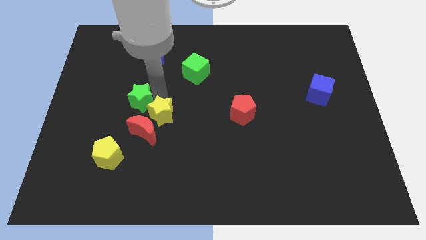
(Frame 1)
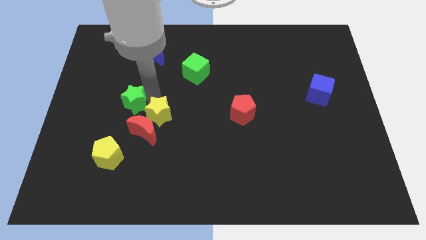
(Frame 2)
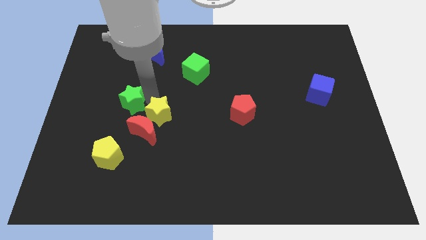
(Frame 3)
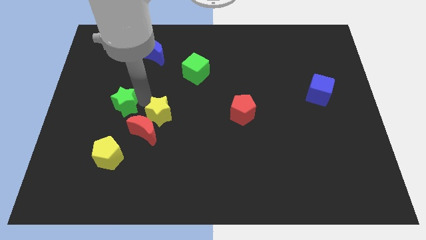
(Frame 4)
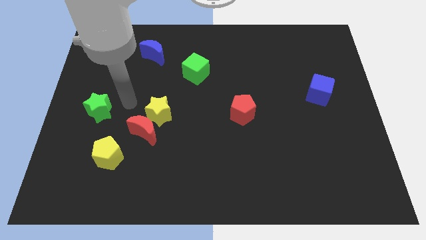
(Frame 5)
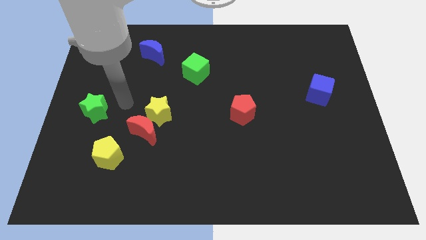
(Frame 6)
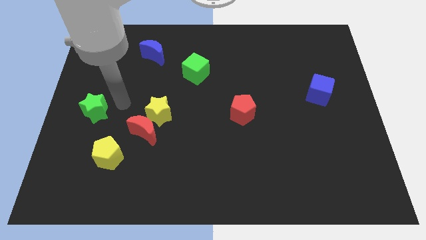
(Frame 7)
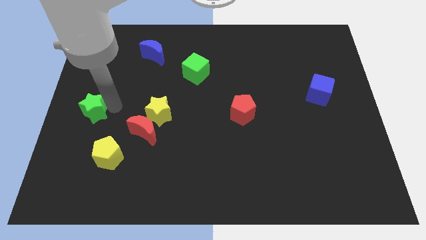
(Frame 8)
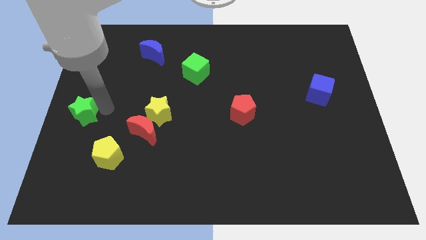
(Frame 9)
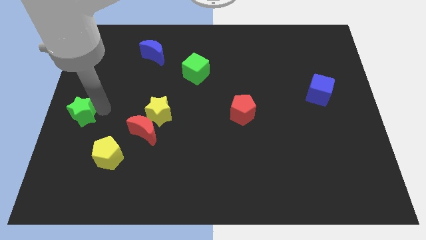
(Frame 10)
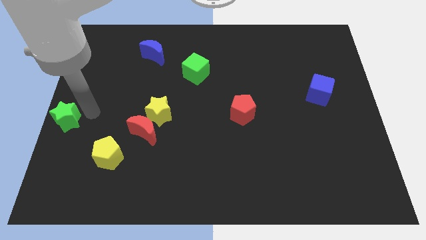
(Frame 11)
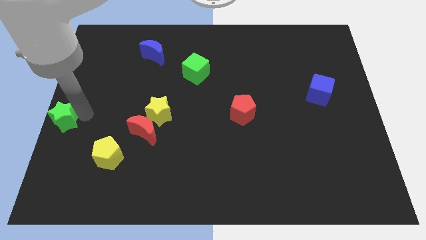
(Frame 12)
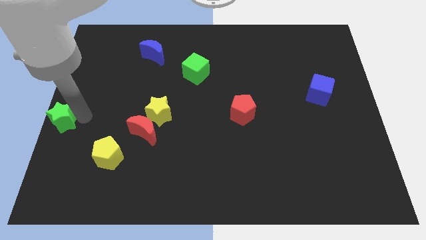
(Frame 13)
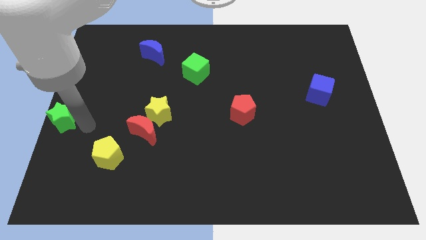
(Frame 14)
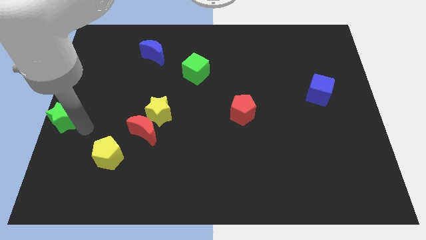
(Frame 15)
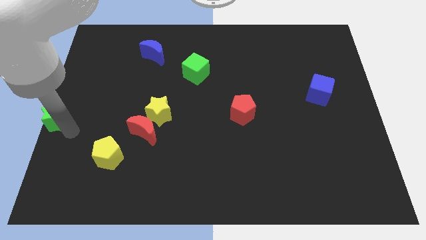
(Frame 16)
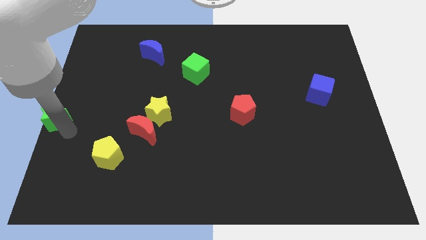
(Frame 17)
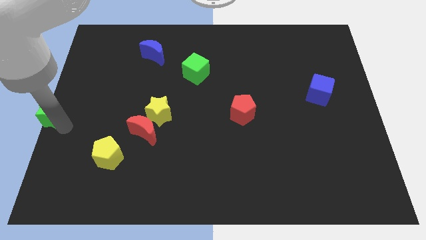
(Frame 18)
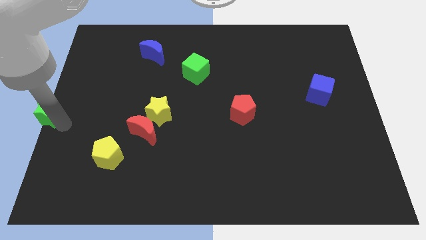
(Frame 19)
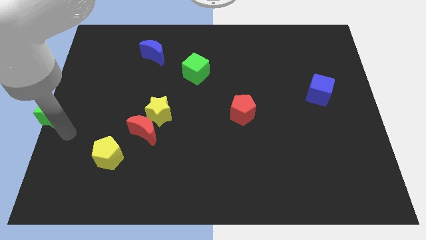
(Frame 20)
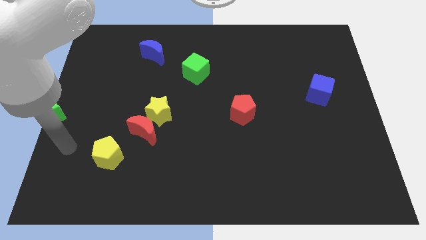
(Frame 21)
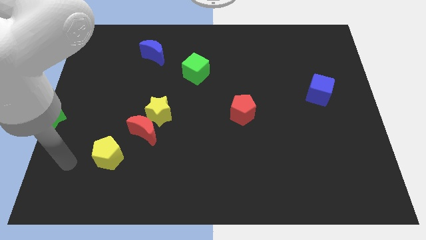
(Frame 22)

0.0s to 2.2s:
place the green star to the left center

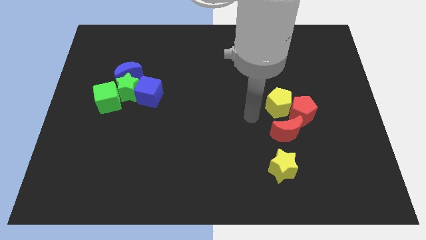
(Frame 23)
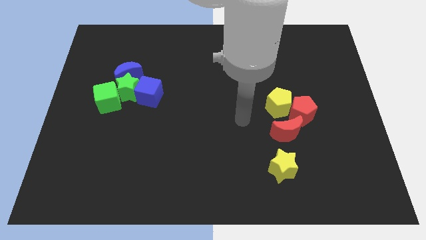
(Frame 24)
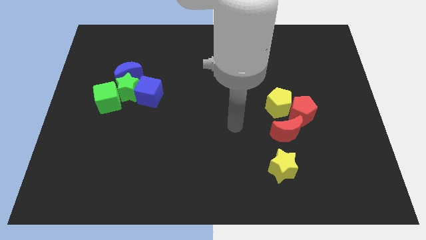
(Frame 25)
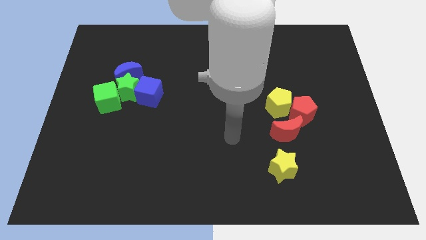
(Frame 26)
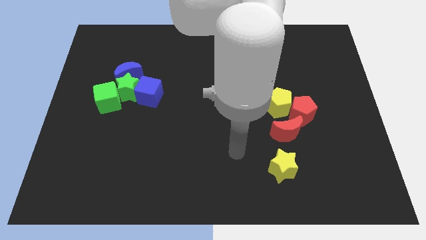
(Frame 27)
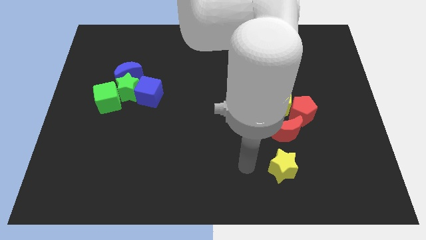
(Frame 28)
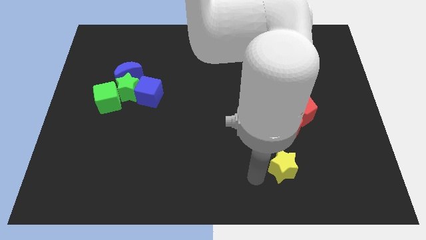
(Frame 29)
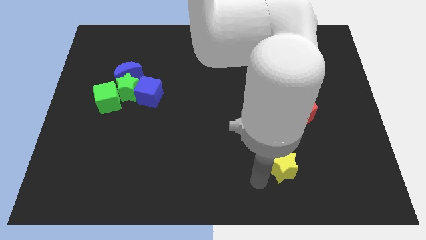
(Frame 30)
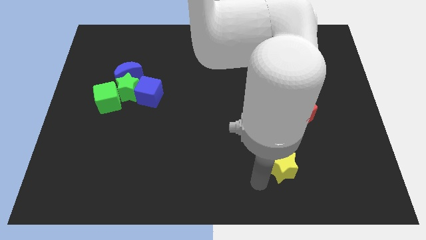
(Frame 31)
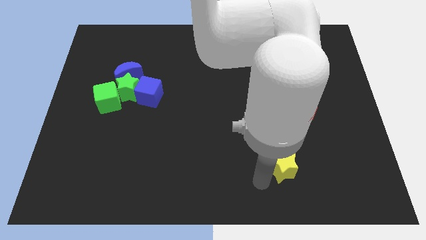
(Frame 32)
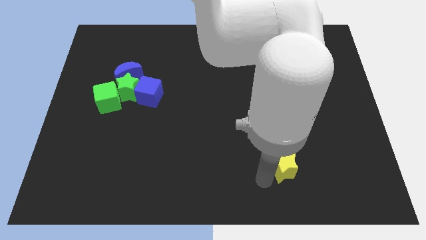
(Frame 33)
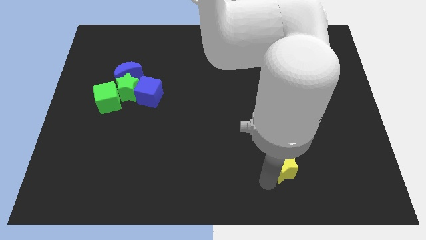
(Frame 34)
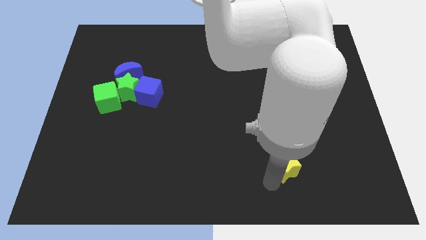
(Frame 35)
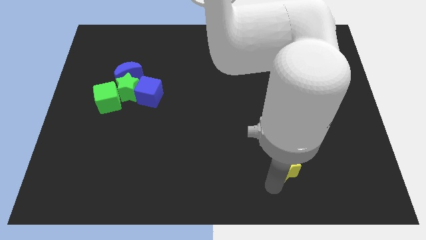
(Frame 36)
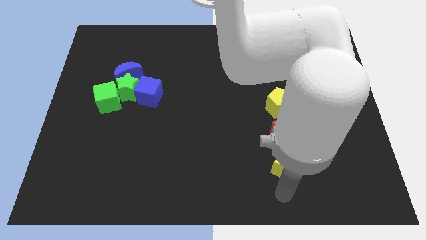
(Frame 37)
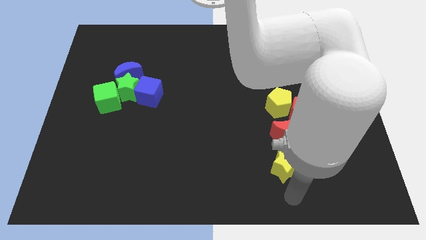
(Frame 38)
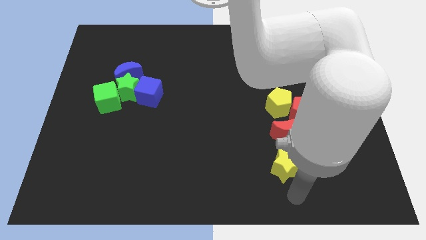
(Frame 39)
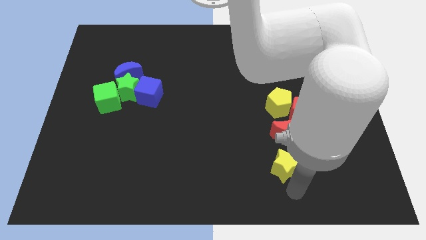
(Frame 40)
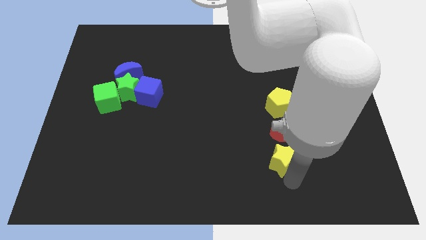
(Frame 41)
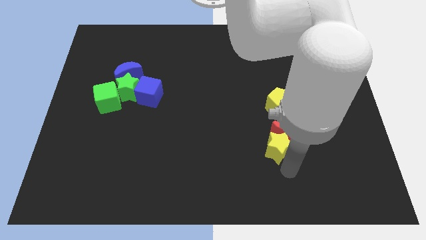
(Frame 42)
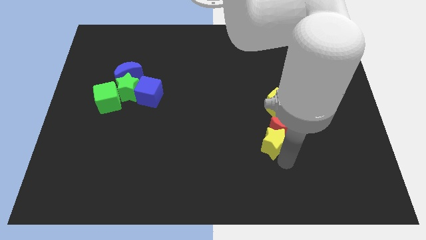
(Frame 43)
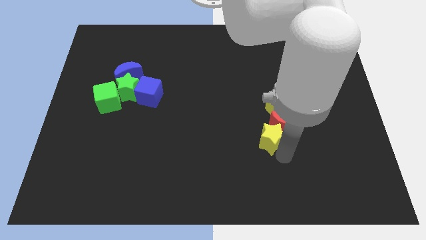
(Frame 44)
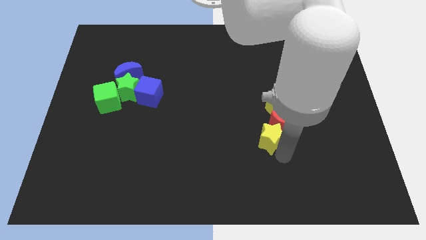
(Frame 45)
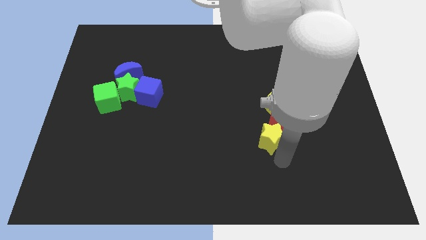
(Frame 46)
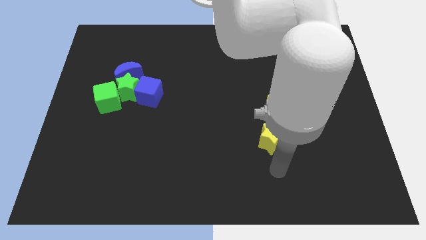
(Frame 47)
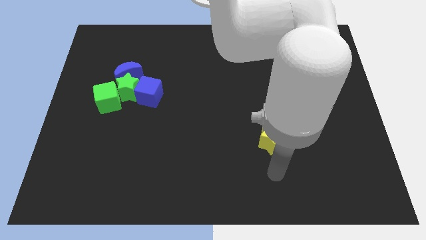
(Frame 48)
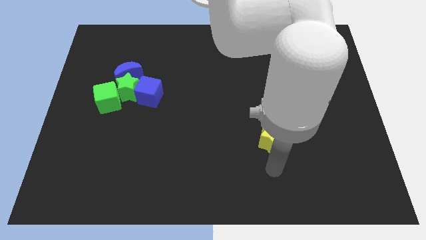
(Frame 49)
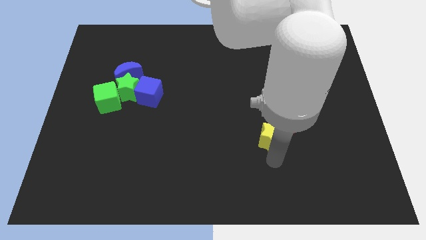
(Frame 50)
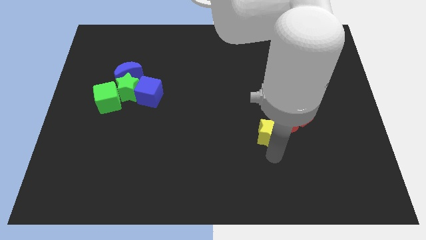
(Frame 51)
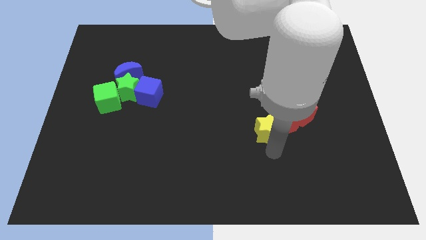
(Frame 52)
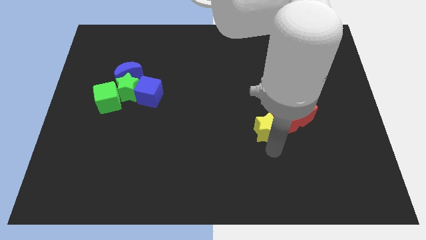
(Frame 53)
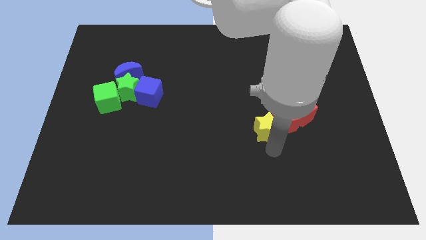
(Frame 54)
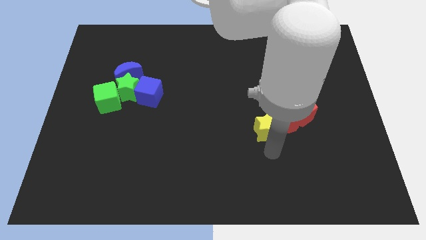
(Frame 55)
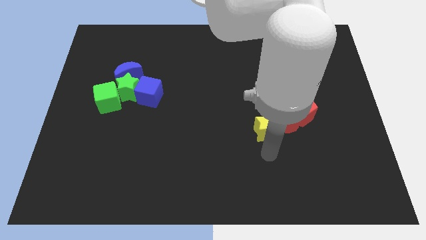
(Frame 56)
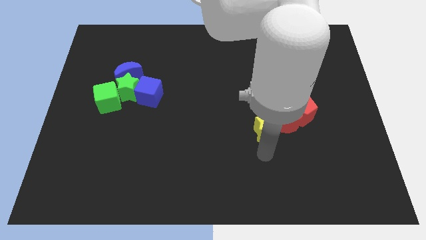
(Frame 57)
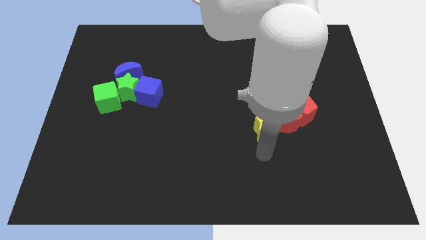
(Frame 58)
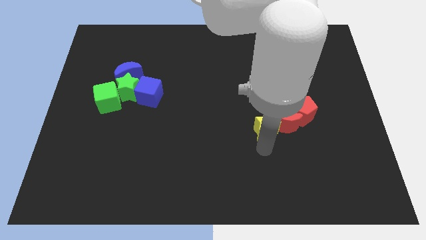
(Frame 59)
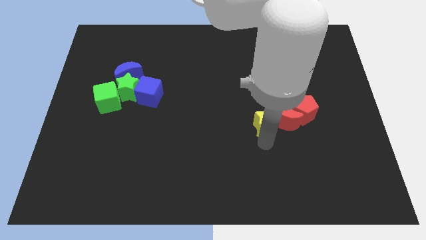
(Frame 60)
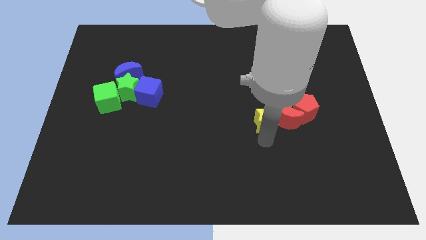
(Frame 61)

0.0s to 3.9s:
move the yellow star to the group of blocks

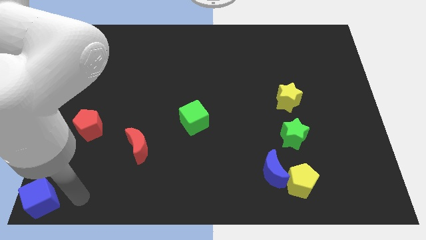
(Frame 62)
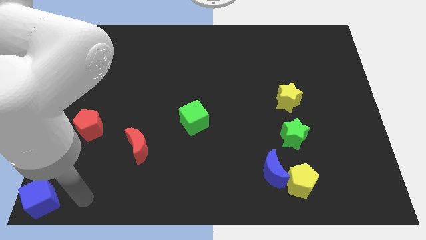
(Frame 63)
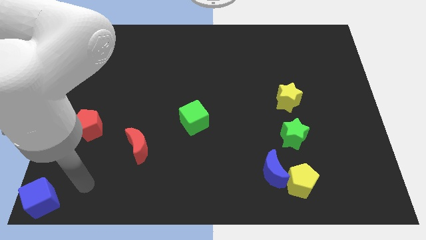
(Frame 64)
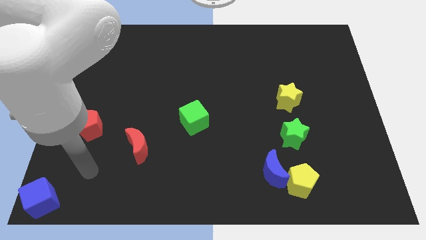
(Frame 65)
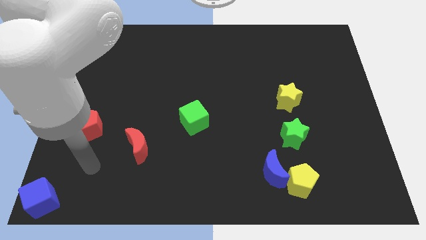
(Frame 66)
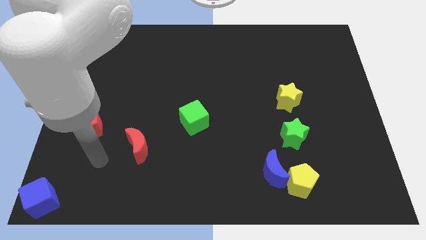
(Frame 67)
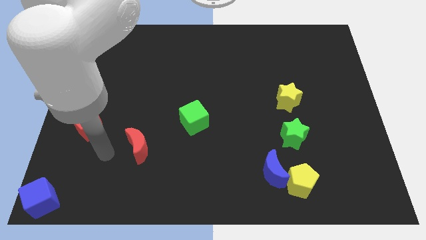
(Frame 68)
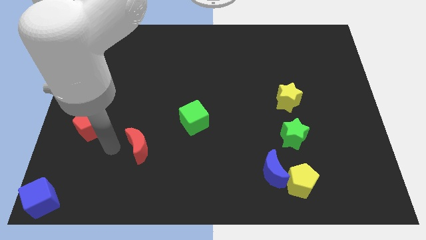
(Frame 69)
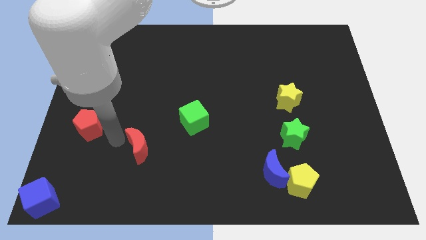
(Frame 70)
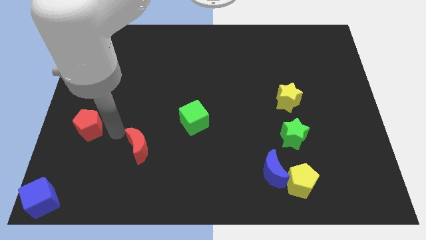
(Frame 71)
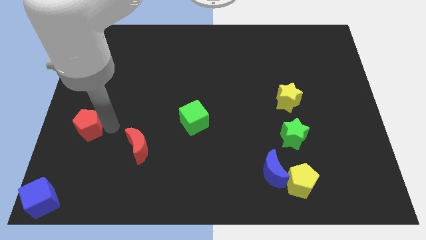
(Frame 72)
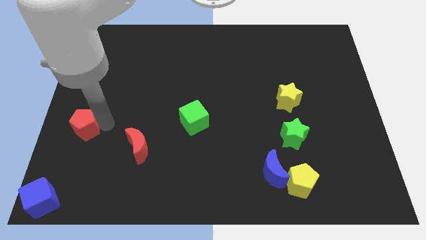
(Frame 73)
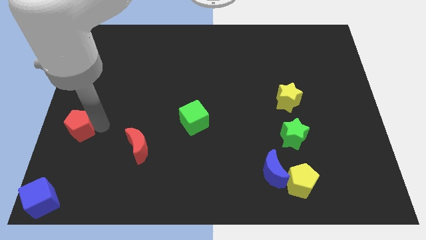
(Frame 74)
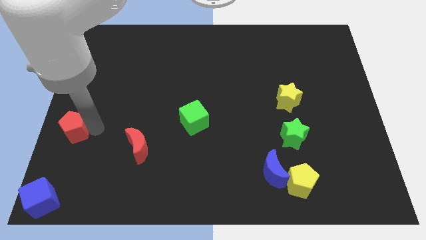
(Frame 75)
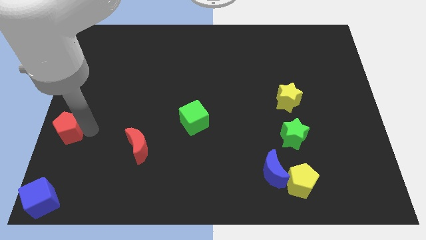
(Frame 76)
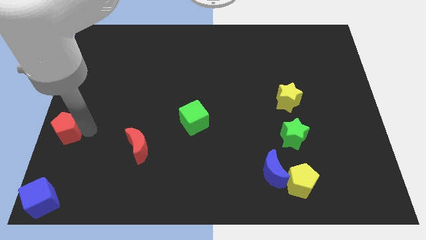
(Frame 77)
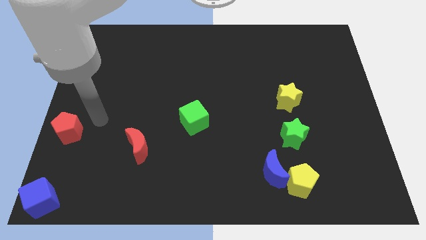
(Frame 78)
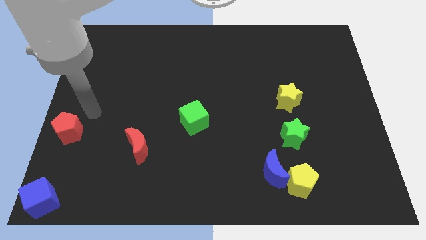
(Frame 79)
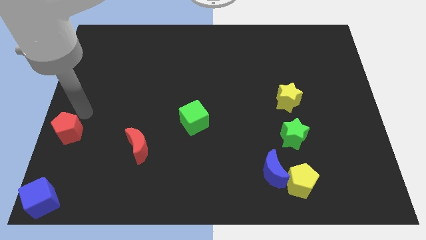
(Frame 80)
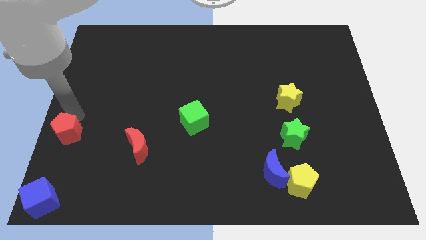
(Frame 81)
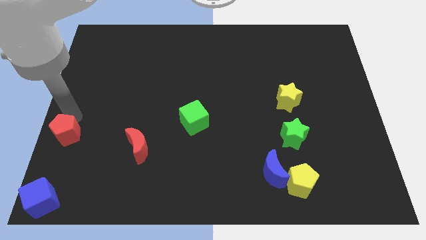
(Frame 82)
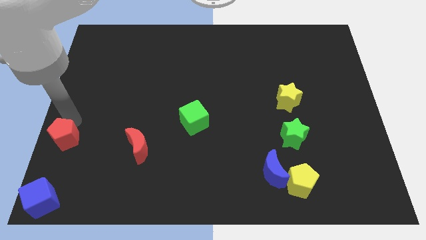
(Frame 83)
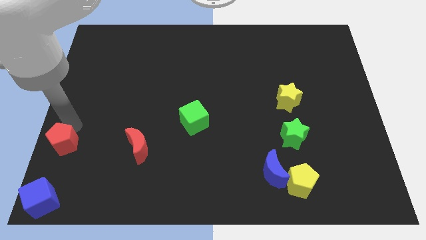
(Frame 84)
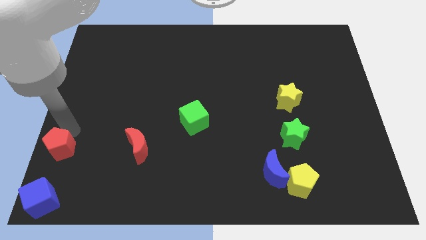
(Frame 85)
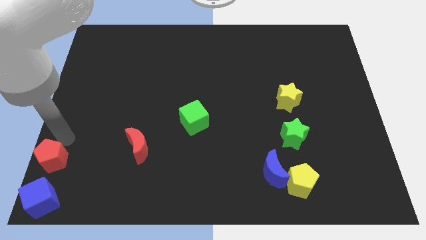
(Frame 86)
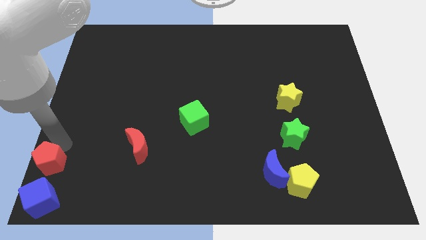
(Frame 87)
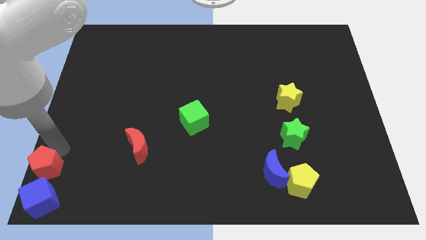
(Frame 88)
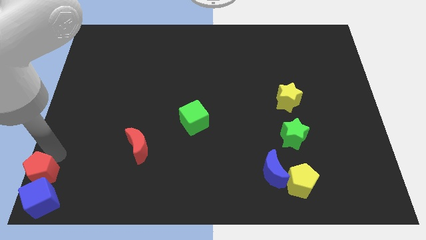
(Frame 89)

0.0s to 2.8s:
push the red pentagon to the top of the blue cube
